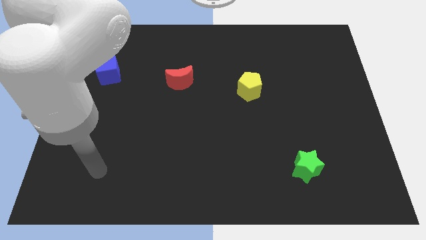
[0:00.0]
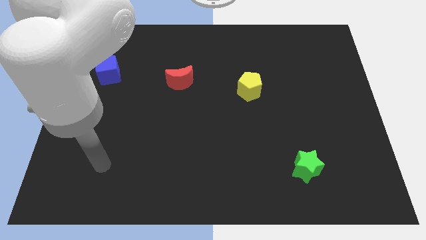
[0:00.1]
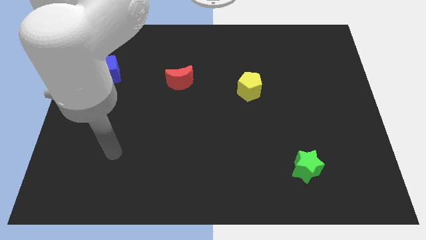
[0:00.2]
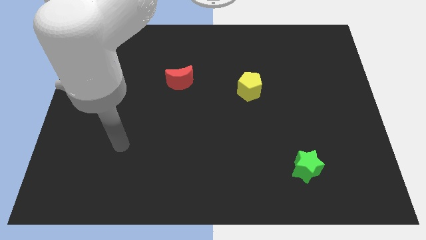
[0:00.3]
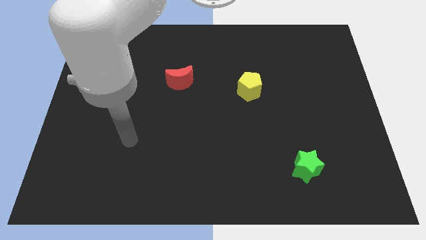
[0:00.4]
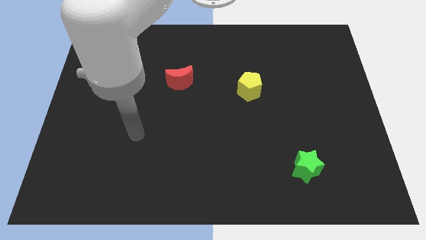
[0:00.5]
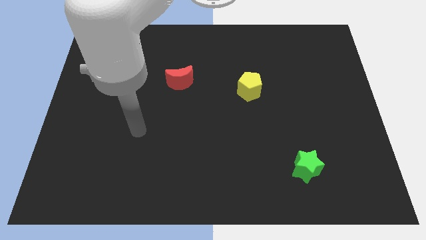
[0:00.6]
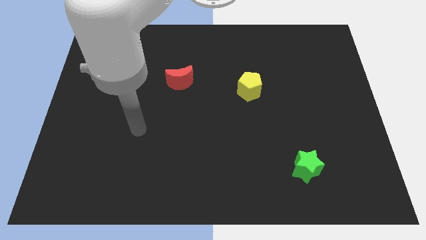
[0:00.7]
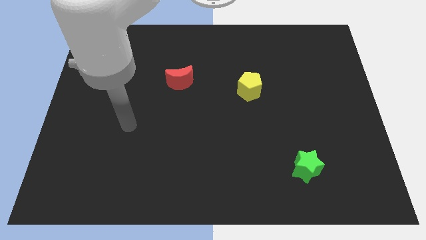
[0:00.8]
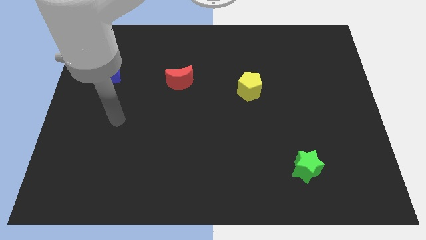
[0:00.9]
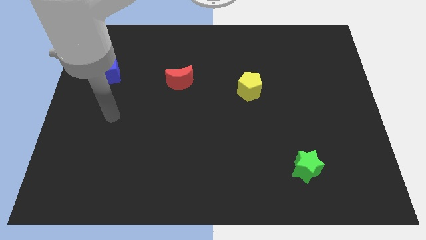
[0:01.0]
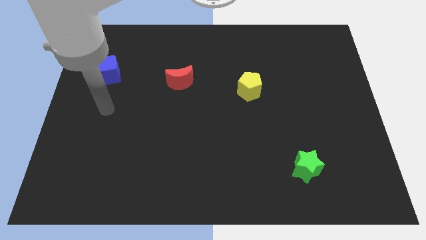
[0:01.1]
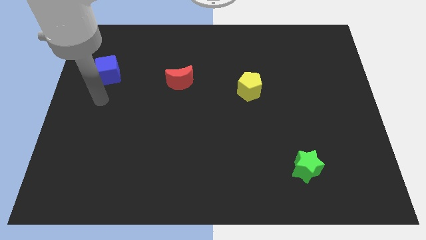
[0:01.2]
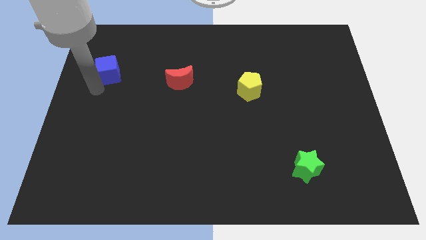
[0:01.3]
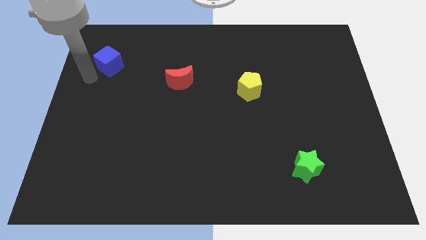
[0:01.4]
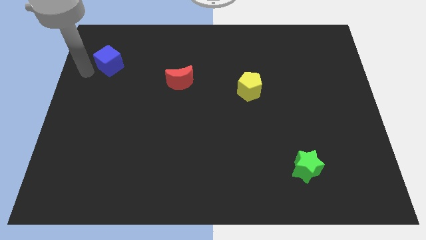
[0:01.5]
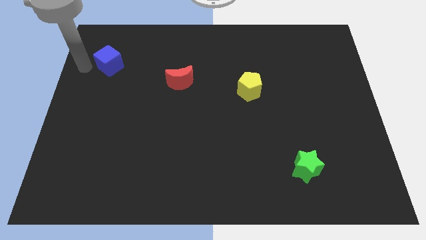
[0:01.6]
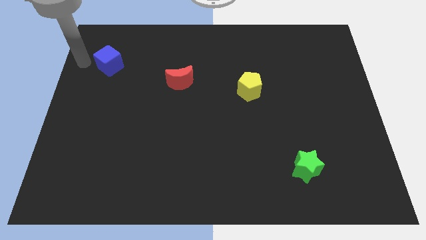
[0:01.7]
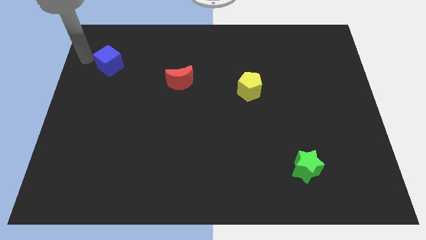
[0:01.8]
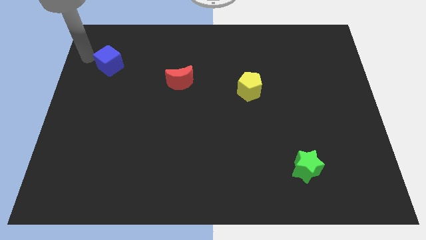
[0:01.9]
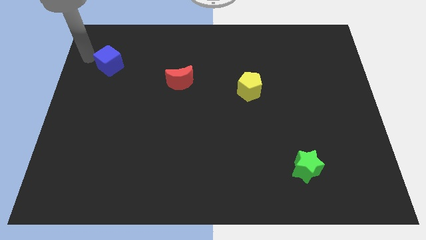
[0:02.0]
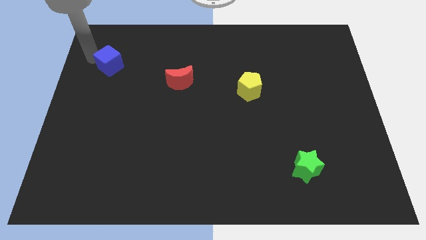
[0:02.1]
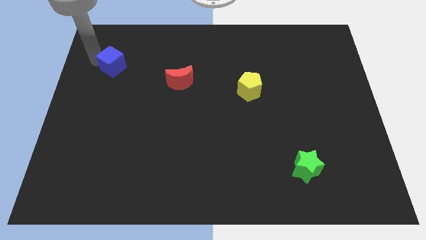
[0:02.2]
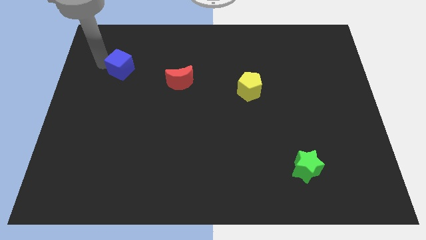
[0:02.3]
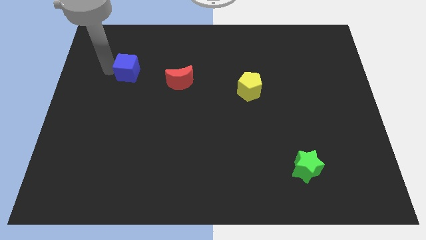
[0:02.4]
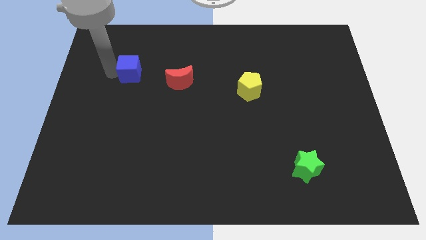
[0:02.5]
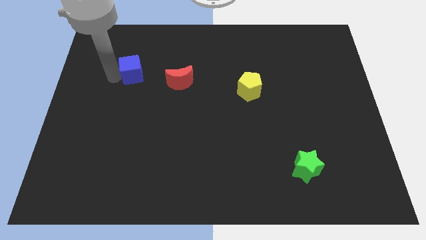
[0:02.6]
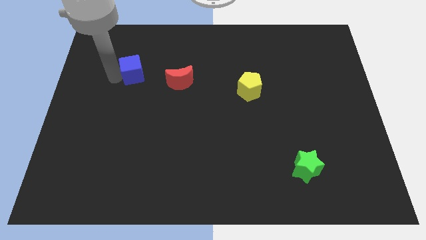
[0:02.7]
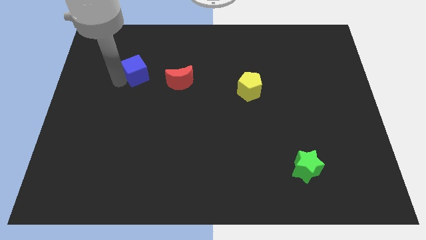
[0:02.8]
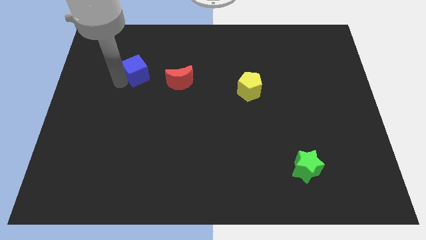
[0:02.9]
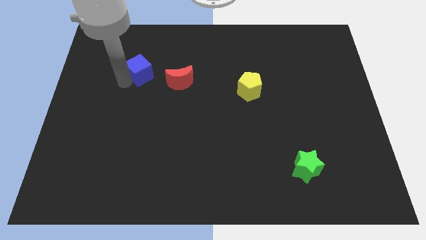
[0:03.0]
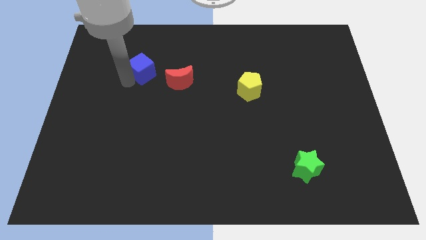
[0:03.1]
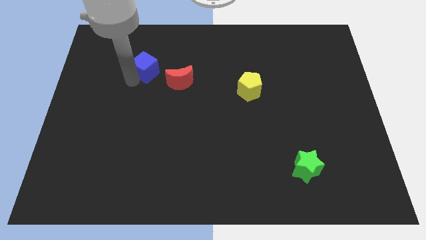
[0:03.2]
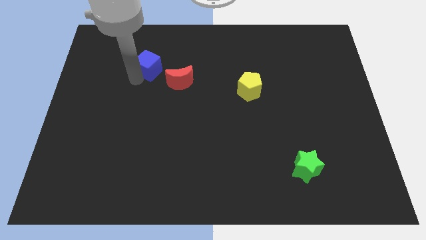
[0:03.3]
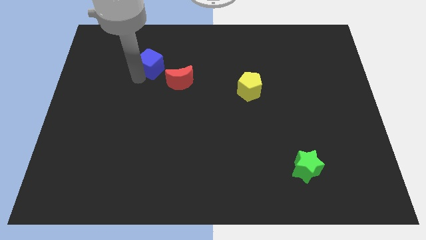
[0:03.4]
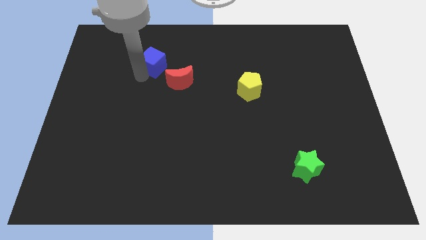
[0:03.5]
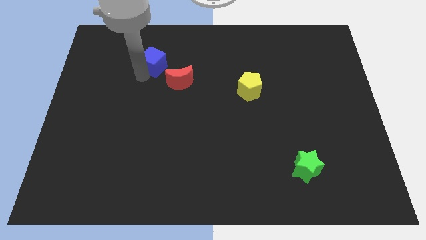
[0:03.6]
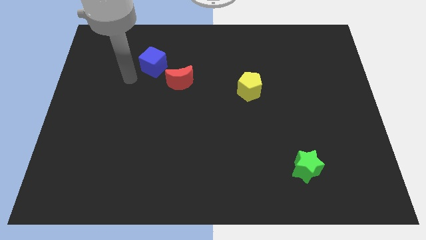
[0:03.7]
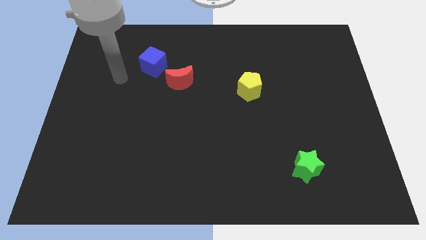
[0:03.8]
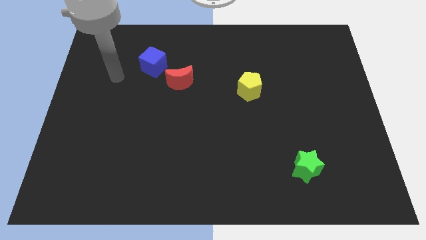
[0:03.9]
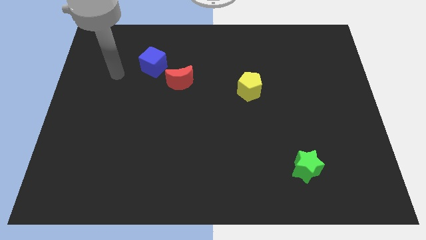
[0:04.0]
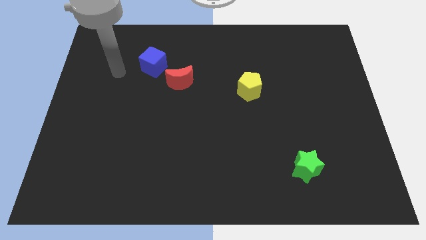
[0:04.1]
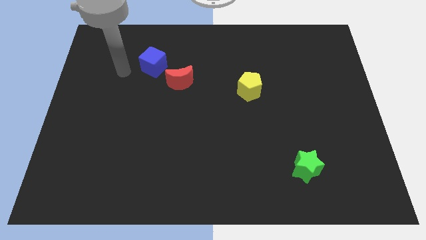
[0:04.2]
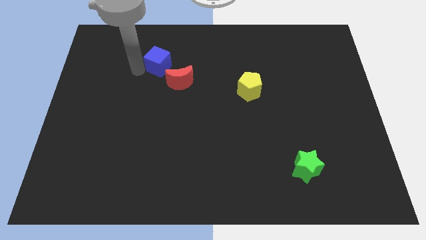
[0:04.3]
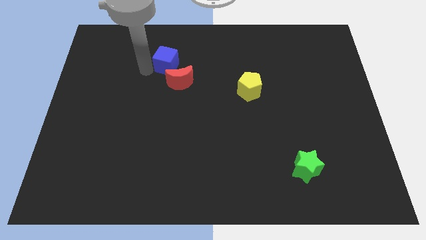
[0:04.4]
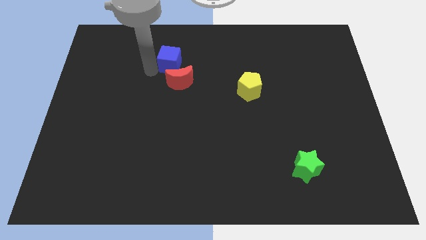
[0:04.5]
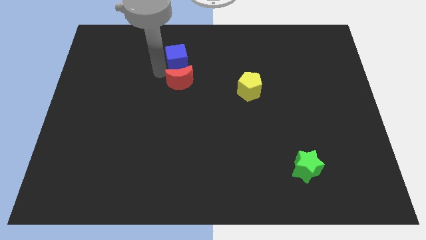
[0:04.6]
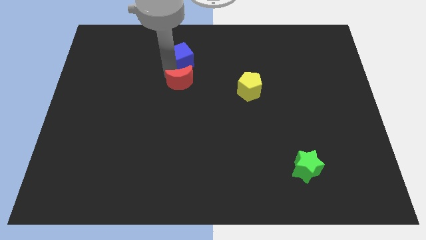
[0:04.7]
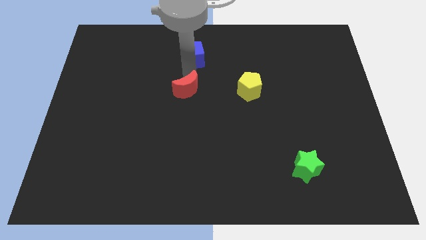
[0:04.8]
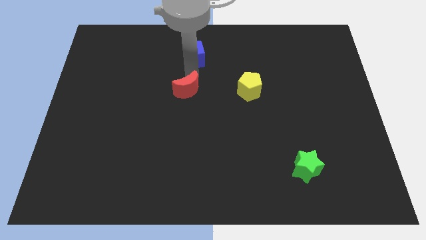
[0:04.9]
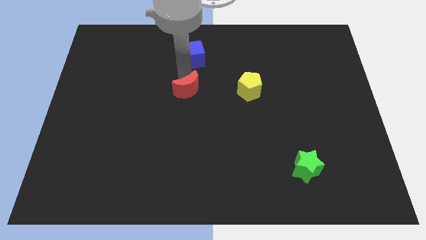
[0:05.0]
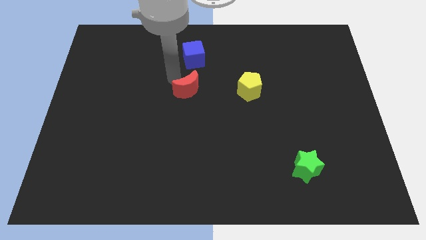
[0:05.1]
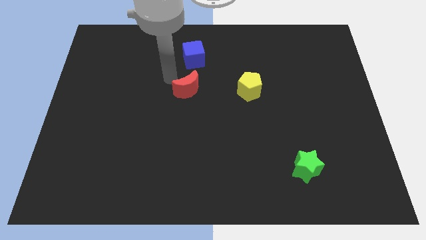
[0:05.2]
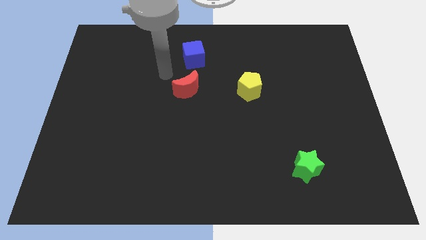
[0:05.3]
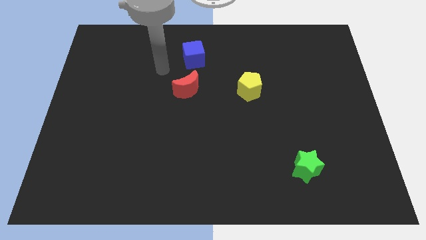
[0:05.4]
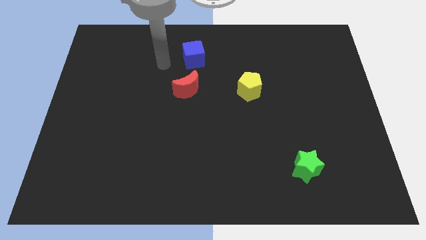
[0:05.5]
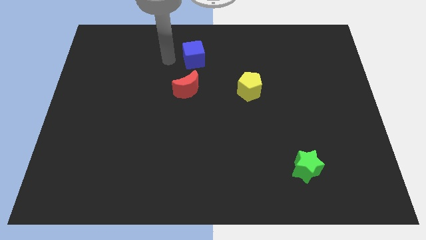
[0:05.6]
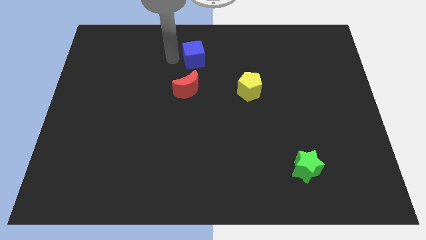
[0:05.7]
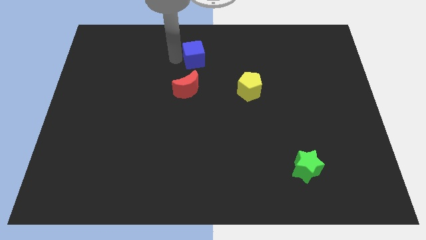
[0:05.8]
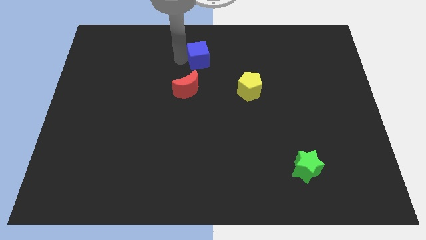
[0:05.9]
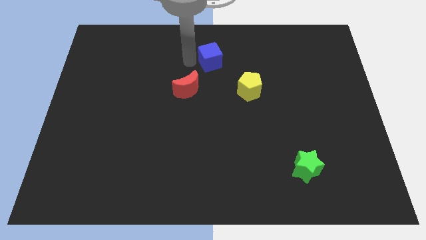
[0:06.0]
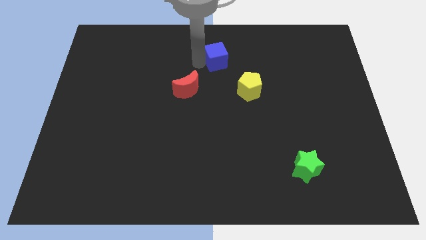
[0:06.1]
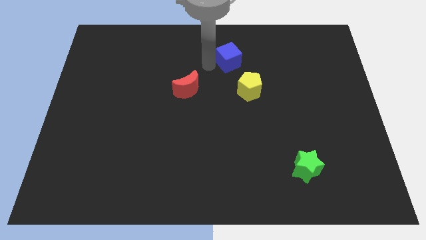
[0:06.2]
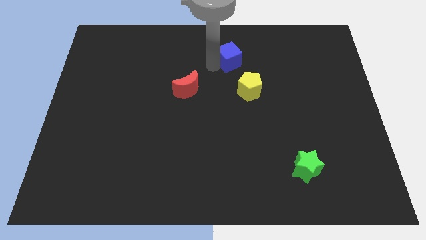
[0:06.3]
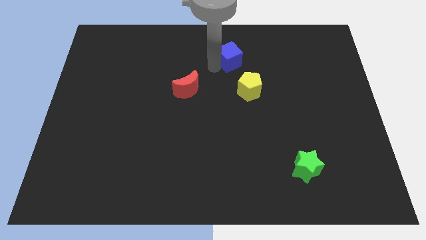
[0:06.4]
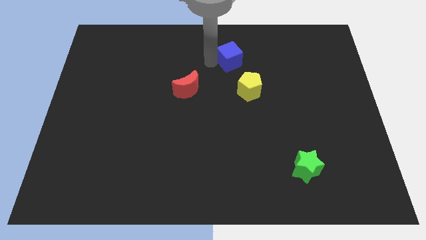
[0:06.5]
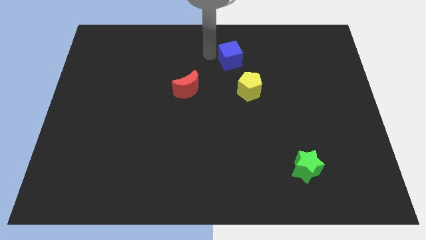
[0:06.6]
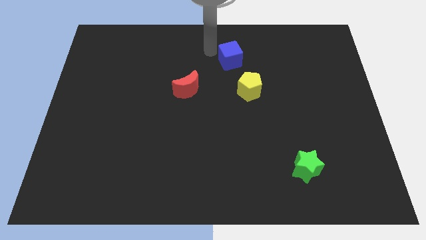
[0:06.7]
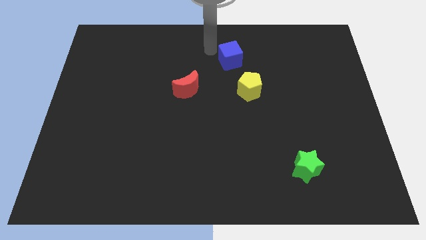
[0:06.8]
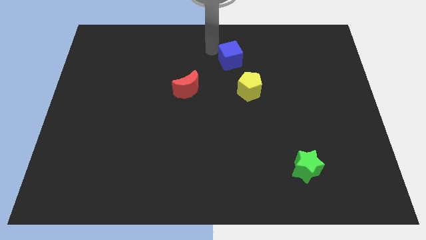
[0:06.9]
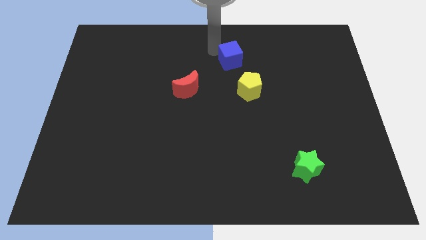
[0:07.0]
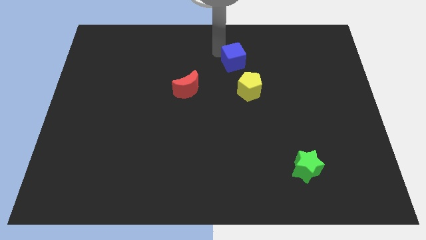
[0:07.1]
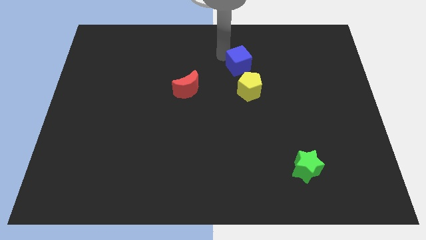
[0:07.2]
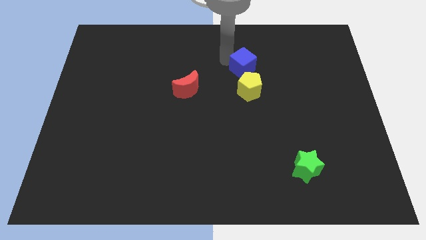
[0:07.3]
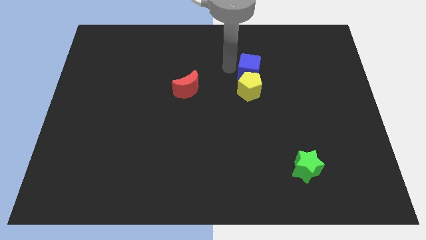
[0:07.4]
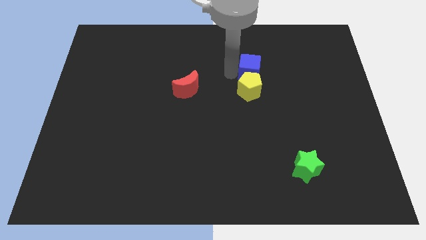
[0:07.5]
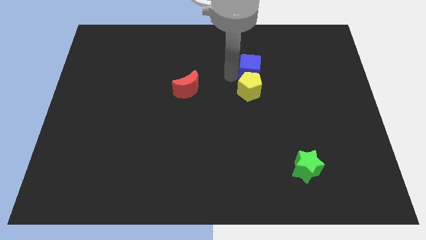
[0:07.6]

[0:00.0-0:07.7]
slide the cube towards the yellow pentagon

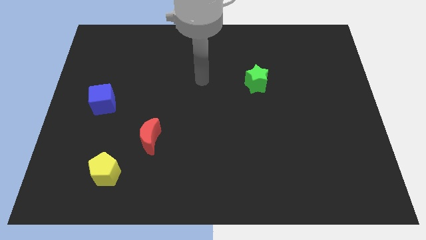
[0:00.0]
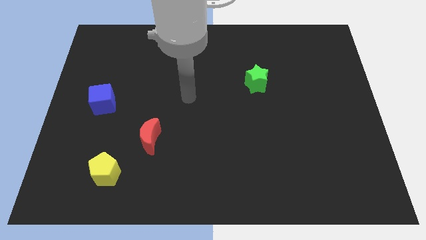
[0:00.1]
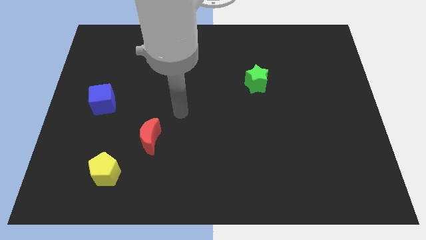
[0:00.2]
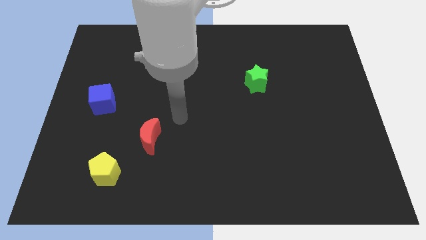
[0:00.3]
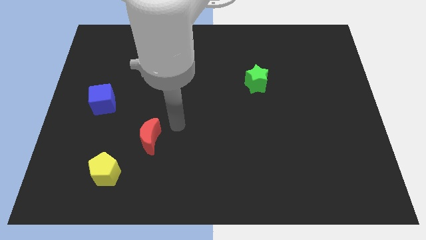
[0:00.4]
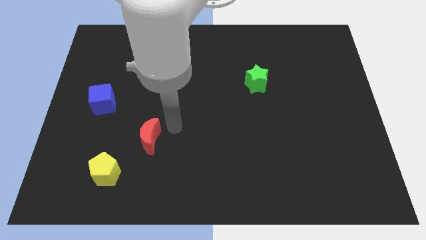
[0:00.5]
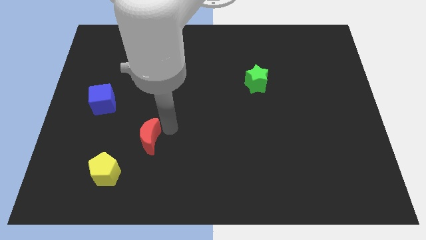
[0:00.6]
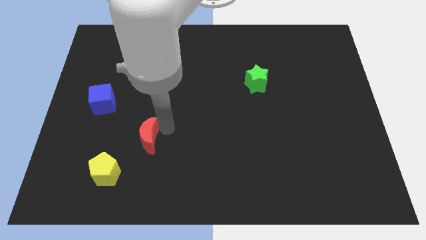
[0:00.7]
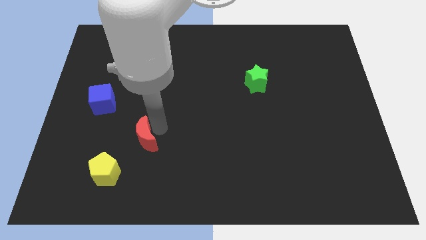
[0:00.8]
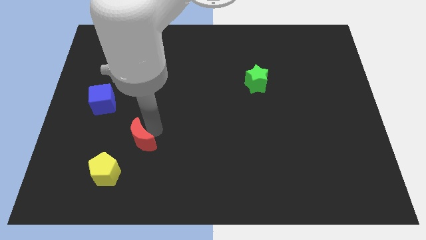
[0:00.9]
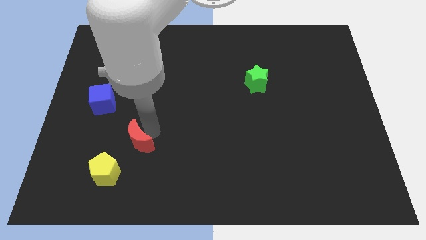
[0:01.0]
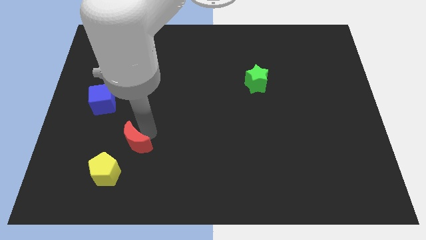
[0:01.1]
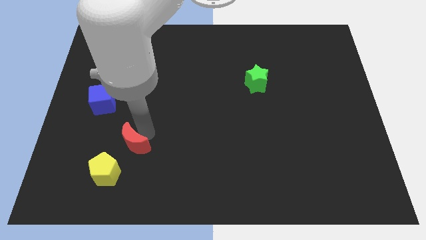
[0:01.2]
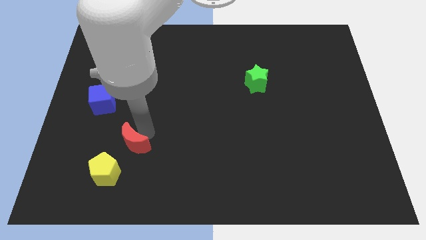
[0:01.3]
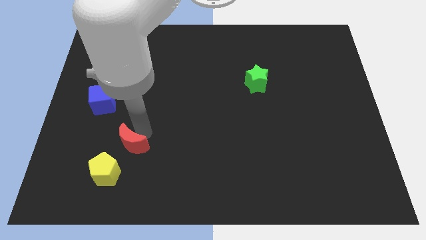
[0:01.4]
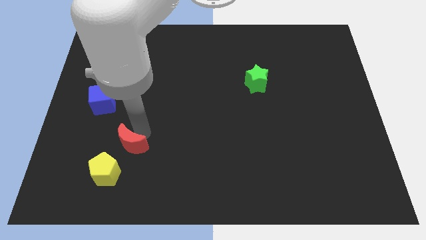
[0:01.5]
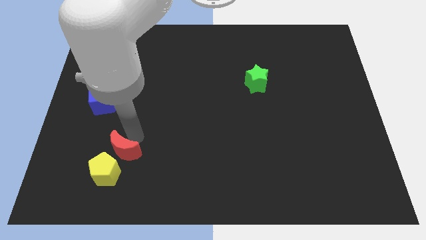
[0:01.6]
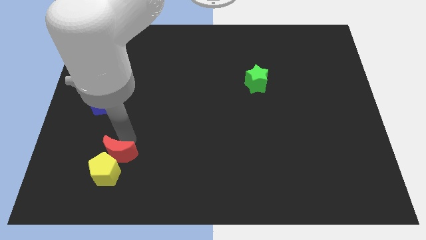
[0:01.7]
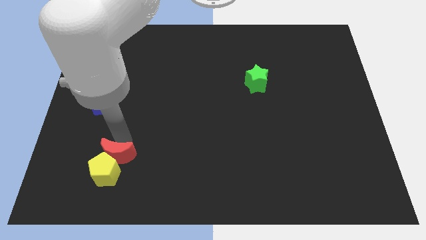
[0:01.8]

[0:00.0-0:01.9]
put the red moon next to the pentagon
